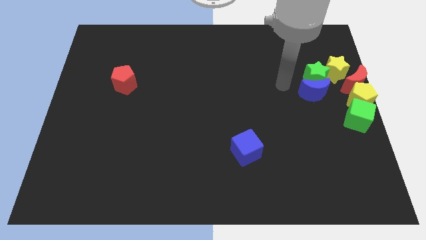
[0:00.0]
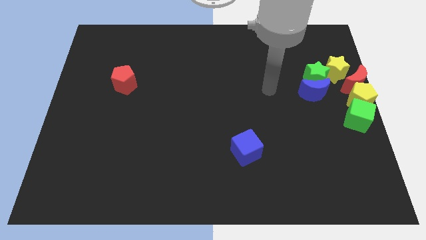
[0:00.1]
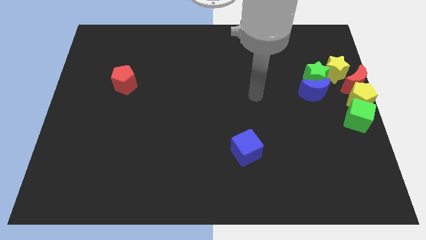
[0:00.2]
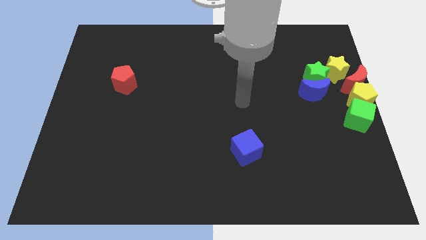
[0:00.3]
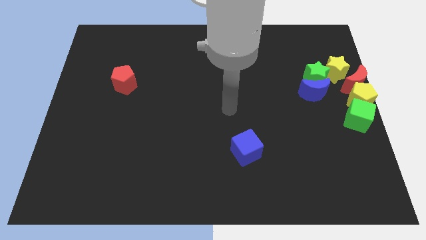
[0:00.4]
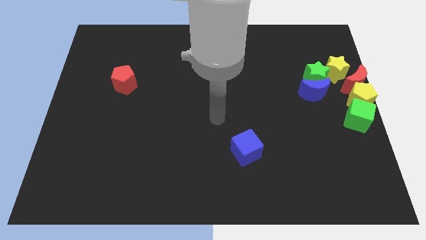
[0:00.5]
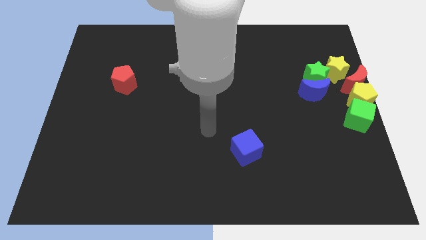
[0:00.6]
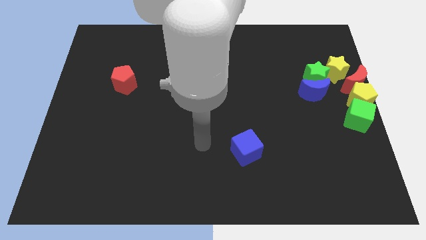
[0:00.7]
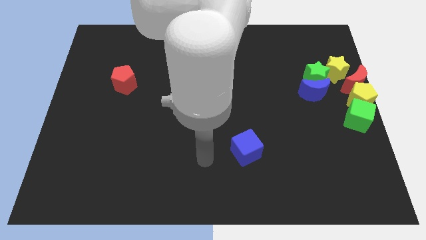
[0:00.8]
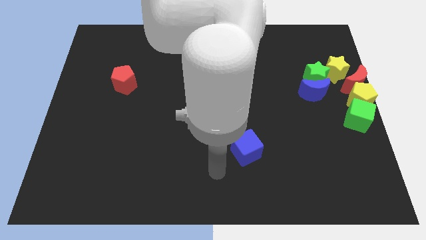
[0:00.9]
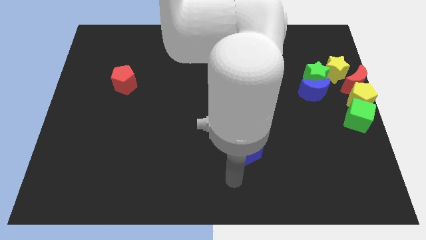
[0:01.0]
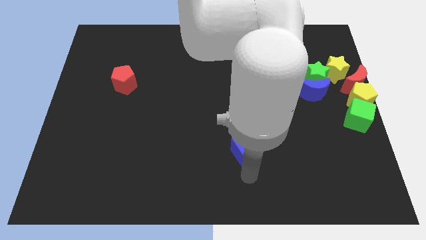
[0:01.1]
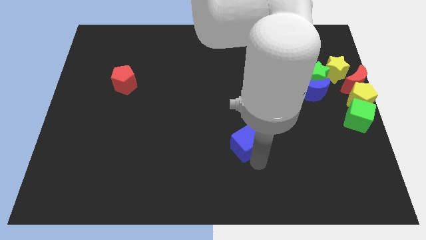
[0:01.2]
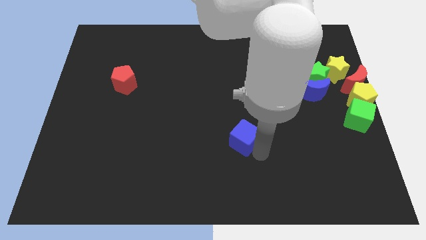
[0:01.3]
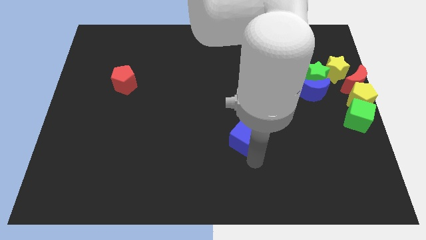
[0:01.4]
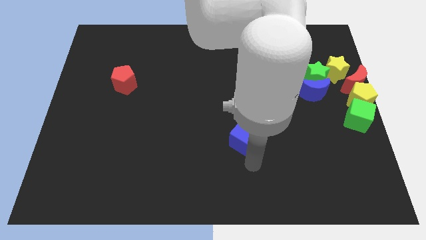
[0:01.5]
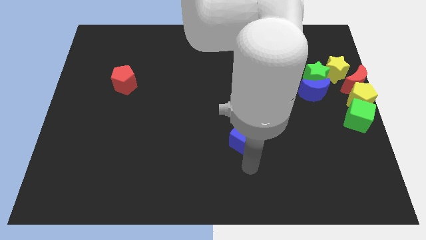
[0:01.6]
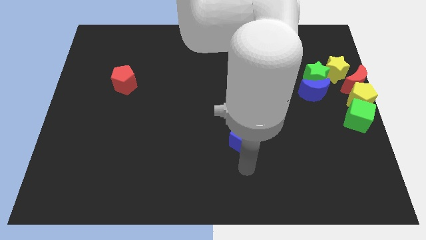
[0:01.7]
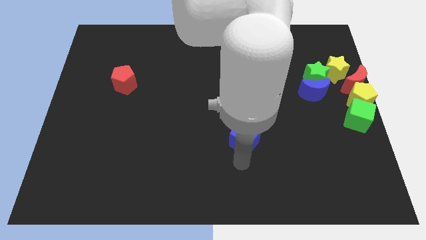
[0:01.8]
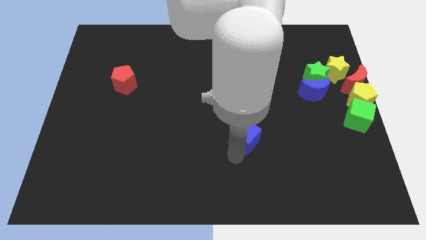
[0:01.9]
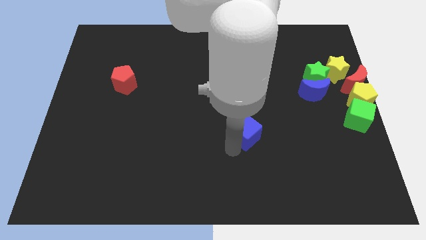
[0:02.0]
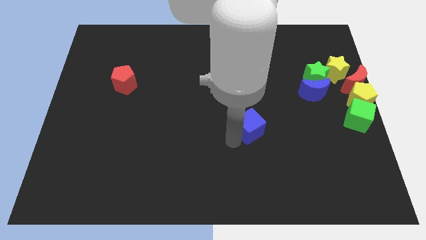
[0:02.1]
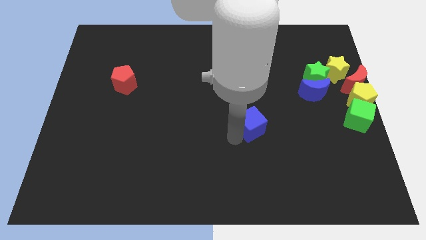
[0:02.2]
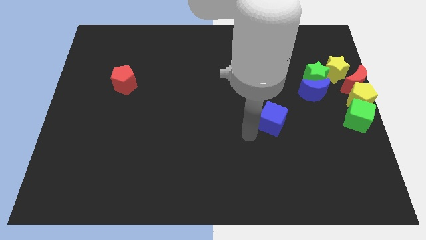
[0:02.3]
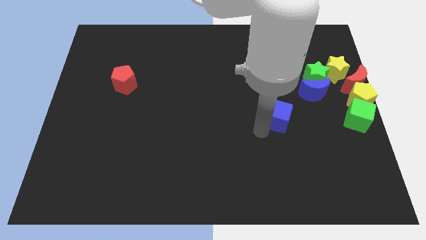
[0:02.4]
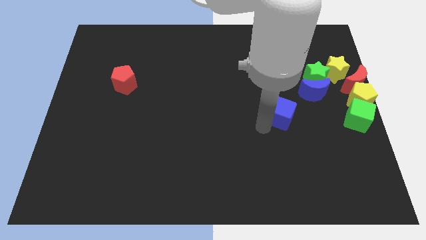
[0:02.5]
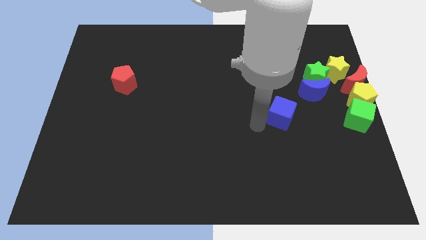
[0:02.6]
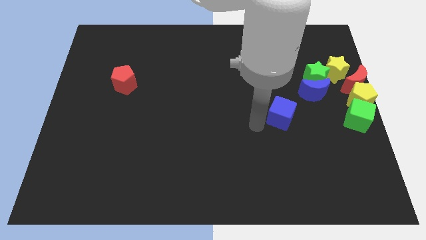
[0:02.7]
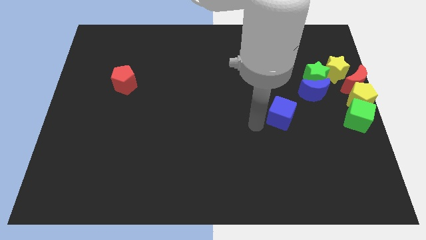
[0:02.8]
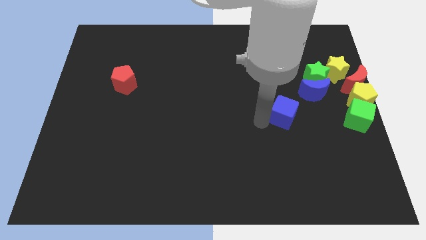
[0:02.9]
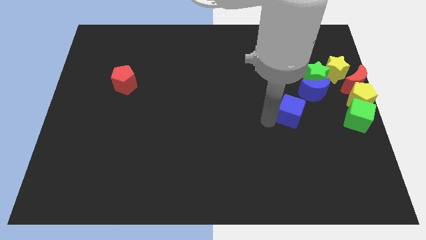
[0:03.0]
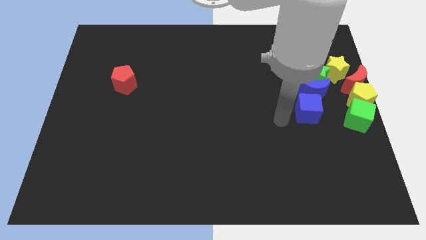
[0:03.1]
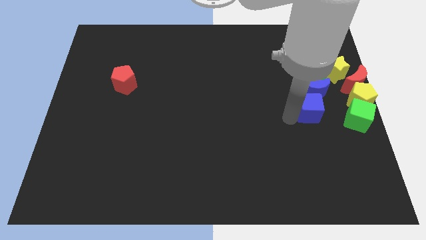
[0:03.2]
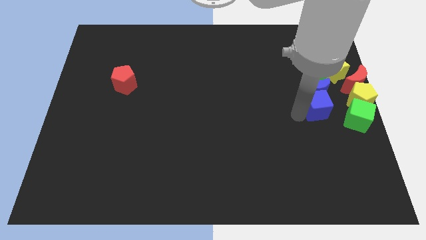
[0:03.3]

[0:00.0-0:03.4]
place blue cube to the bottom of blue moon

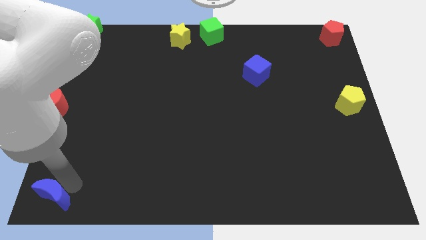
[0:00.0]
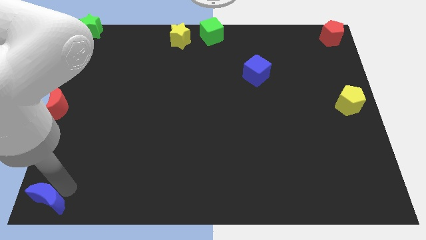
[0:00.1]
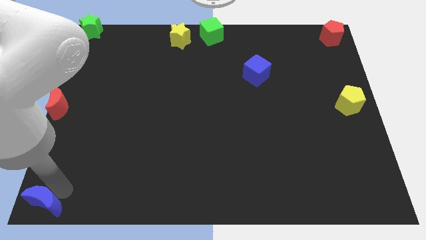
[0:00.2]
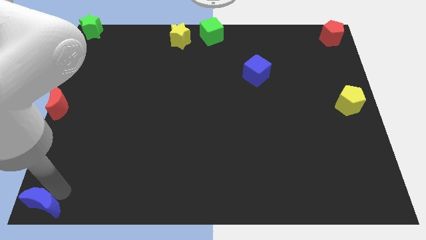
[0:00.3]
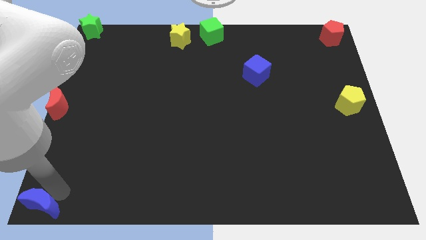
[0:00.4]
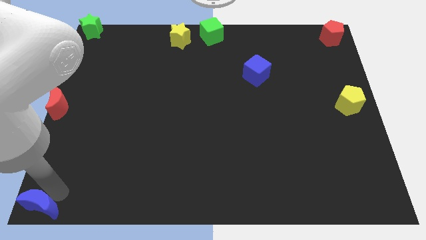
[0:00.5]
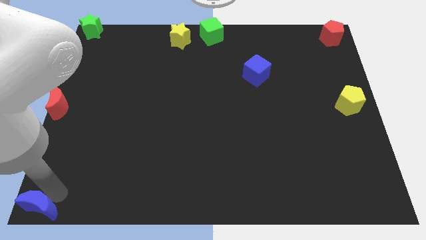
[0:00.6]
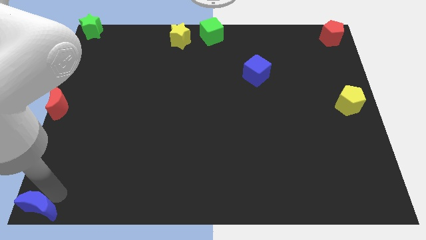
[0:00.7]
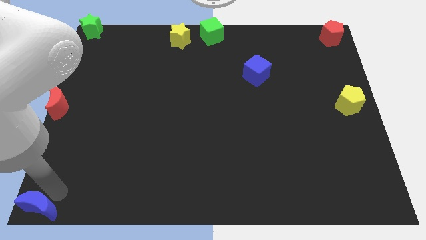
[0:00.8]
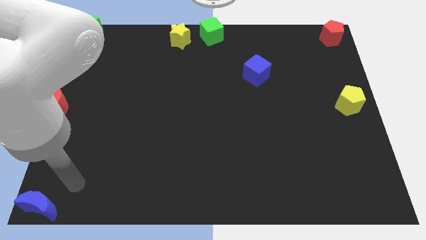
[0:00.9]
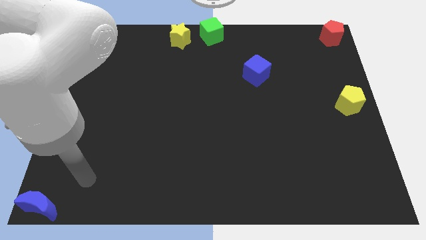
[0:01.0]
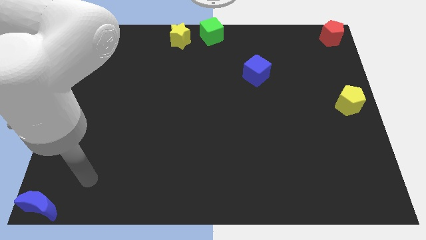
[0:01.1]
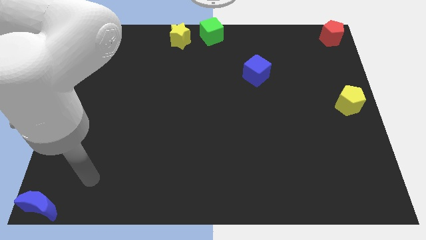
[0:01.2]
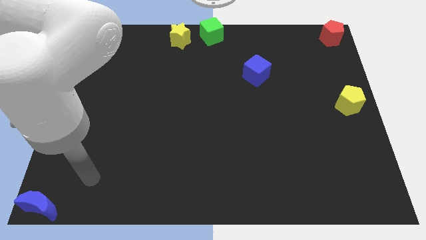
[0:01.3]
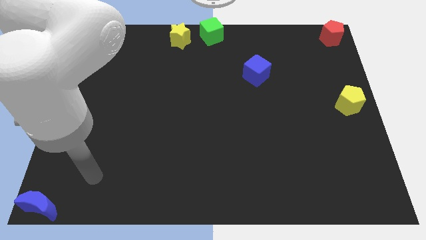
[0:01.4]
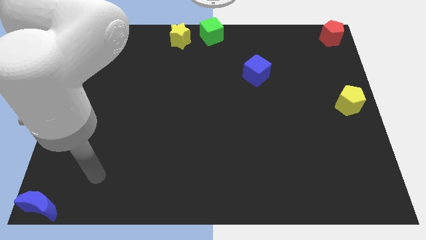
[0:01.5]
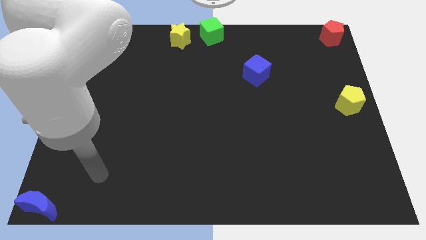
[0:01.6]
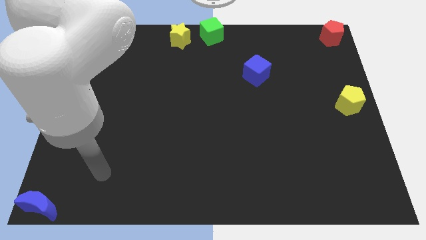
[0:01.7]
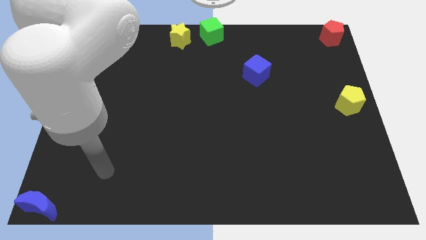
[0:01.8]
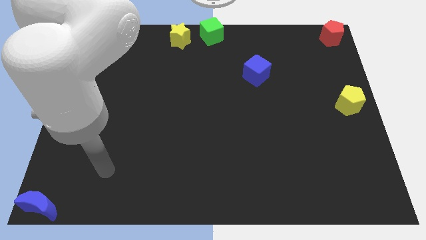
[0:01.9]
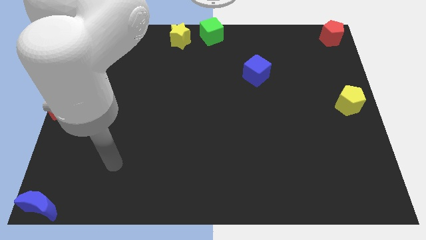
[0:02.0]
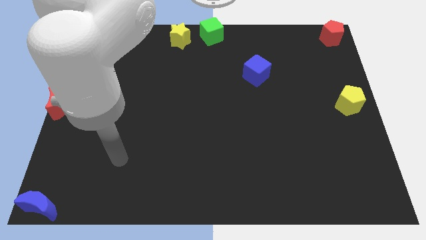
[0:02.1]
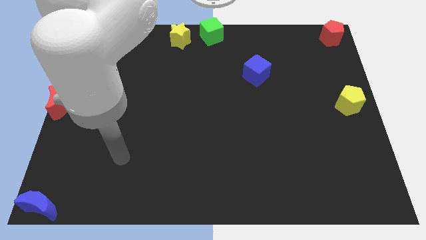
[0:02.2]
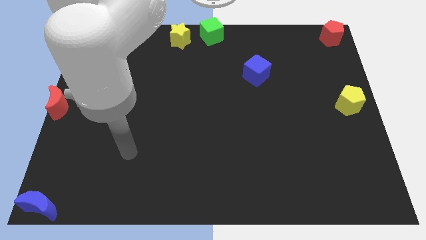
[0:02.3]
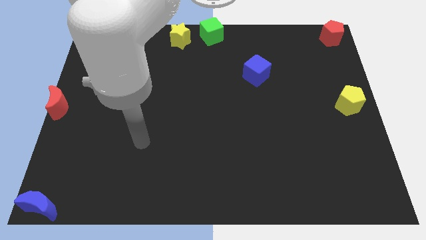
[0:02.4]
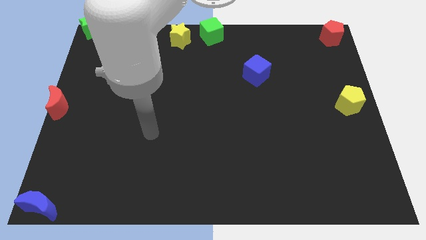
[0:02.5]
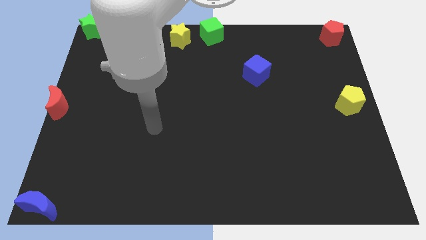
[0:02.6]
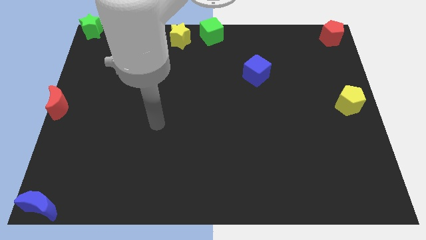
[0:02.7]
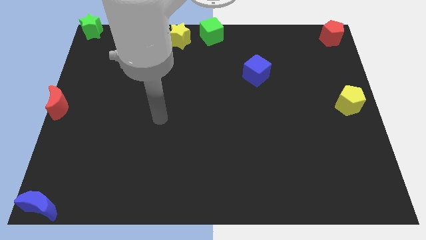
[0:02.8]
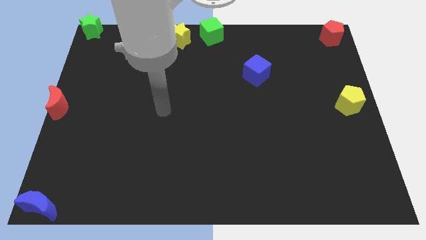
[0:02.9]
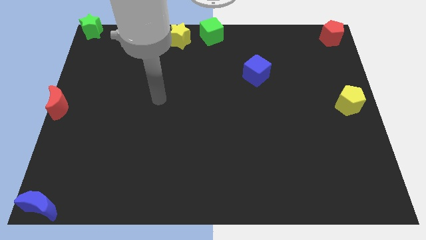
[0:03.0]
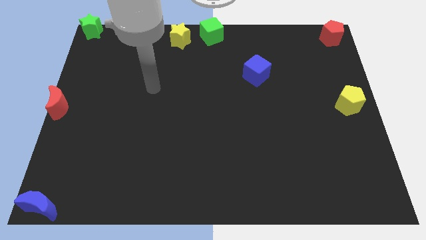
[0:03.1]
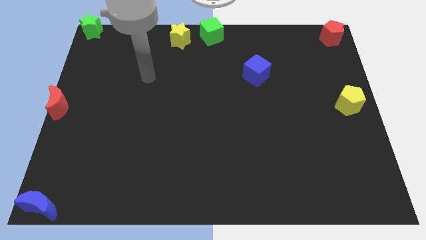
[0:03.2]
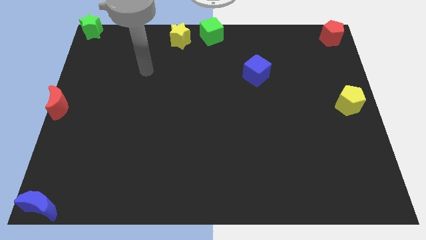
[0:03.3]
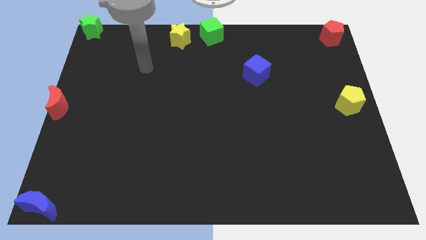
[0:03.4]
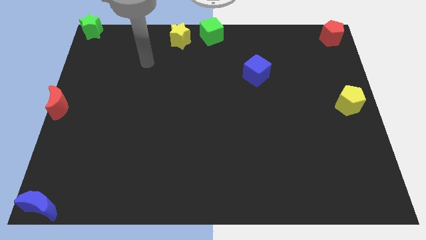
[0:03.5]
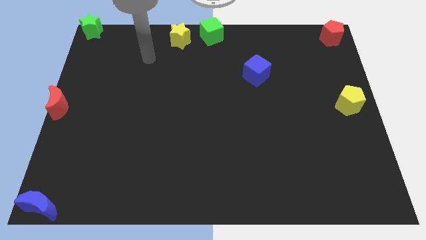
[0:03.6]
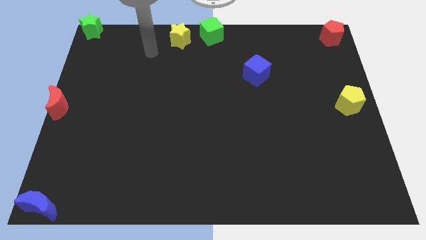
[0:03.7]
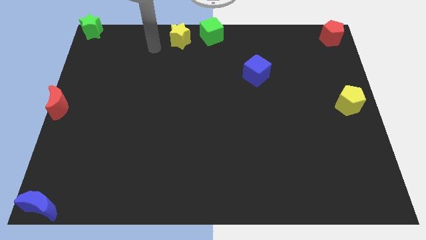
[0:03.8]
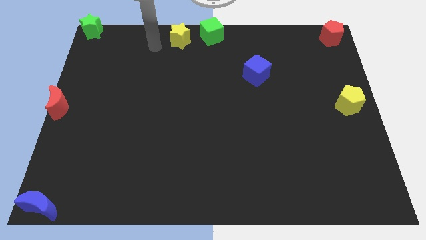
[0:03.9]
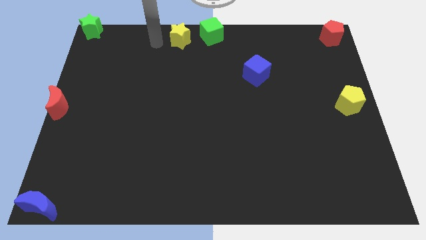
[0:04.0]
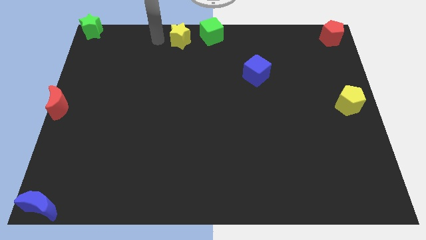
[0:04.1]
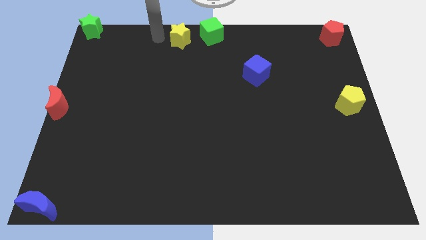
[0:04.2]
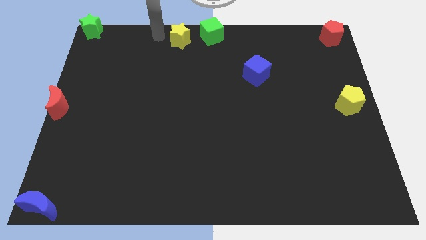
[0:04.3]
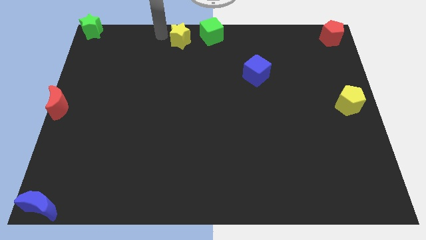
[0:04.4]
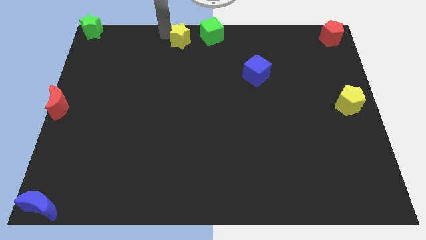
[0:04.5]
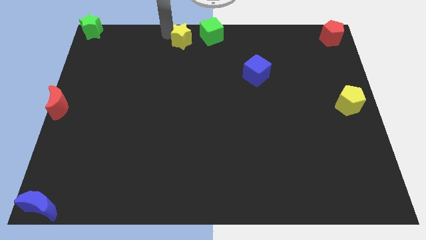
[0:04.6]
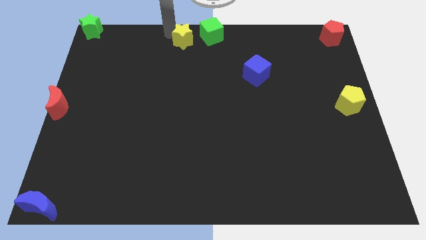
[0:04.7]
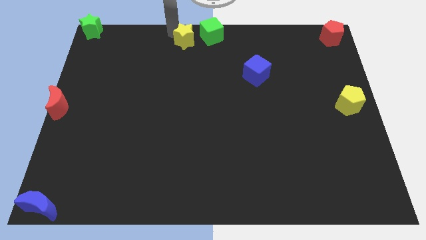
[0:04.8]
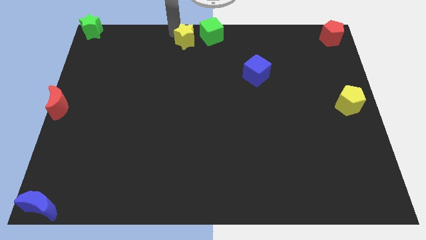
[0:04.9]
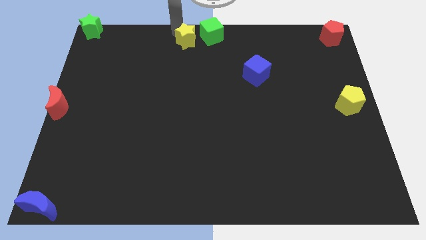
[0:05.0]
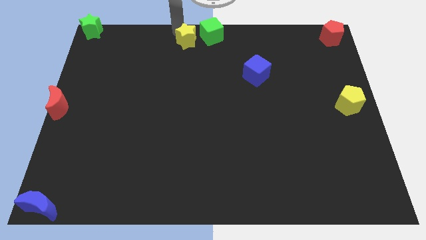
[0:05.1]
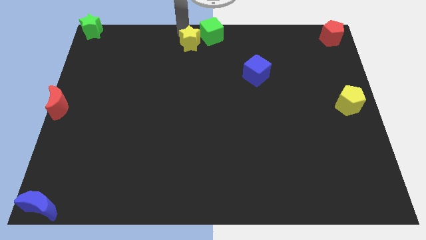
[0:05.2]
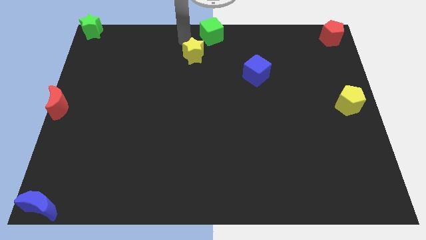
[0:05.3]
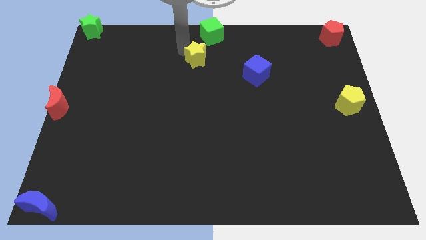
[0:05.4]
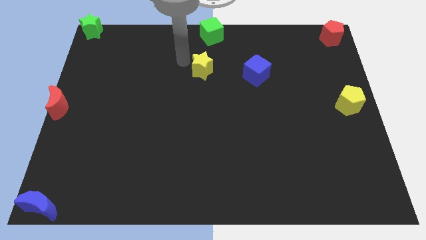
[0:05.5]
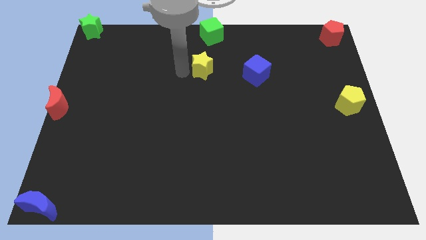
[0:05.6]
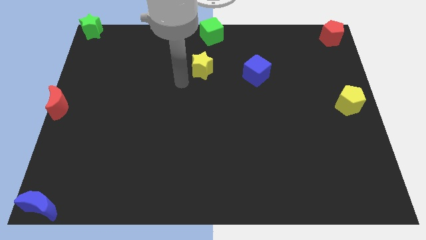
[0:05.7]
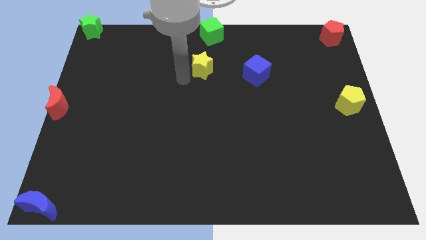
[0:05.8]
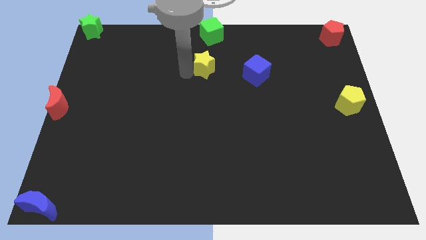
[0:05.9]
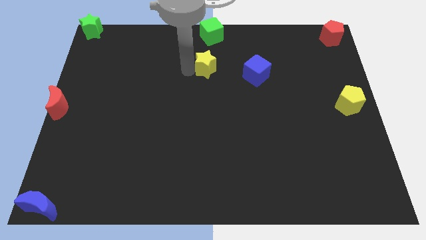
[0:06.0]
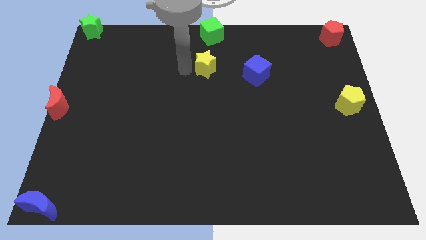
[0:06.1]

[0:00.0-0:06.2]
place the yellow star below the green cube
